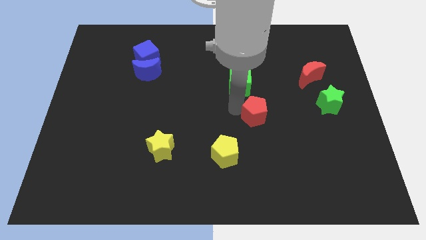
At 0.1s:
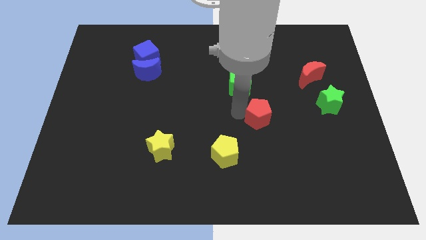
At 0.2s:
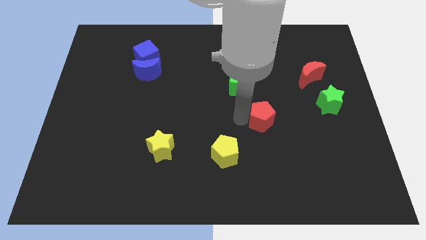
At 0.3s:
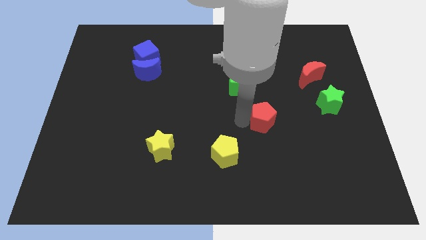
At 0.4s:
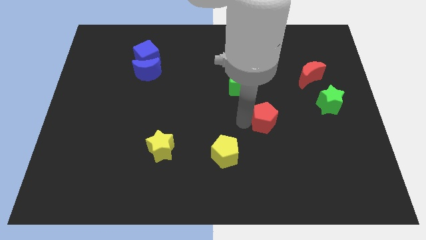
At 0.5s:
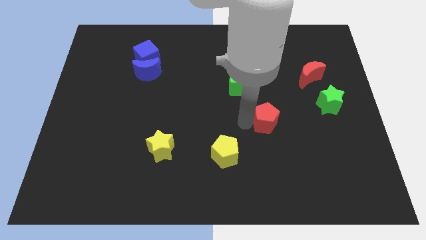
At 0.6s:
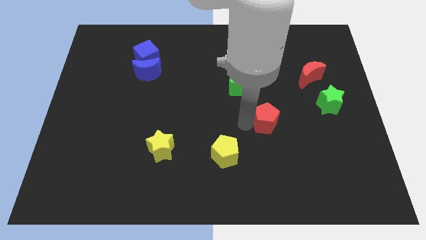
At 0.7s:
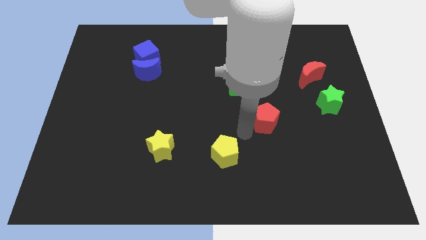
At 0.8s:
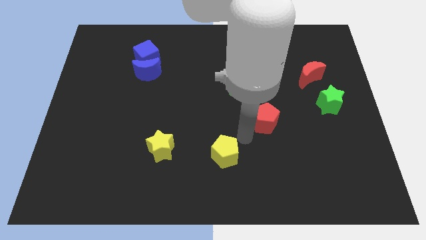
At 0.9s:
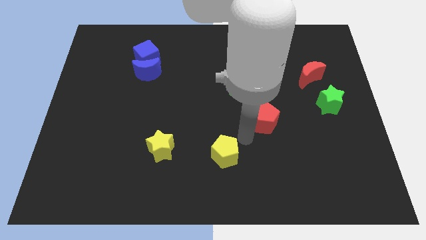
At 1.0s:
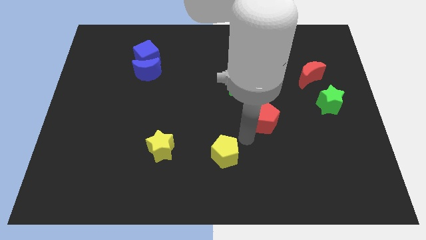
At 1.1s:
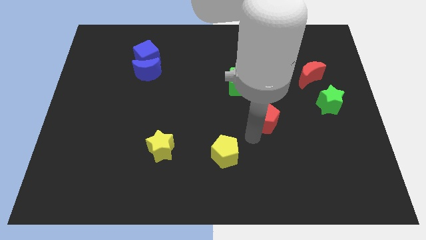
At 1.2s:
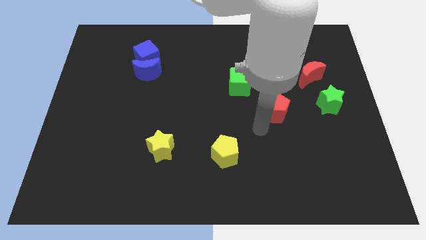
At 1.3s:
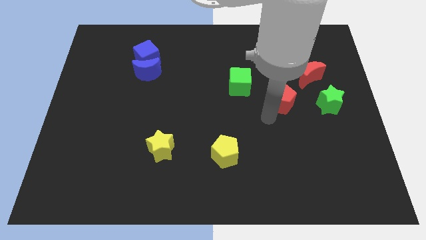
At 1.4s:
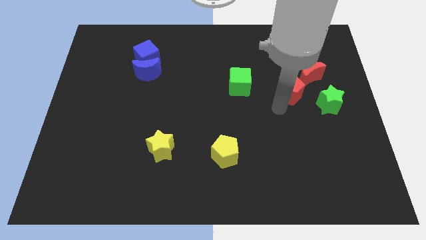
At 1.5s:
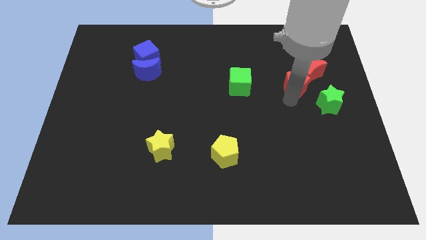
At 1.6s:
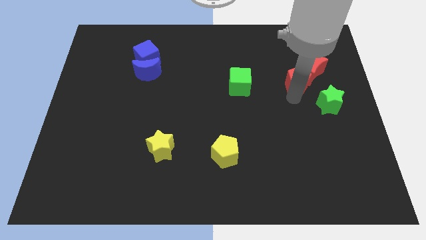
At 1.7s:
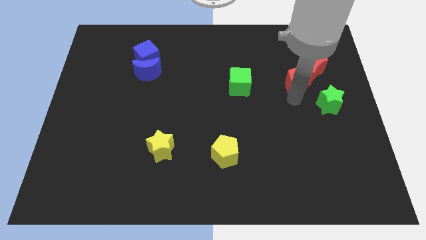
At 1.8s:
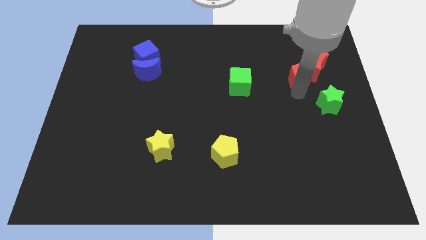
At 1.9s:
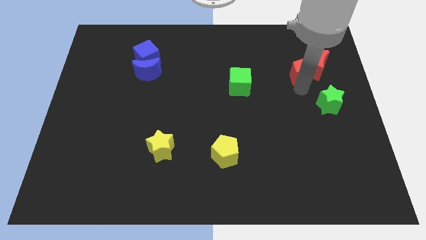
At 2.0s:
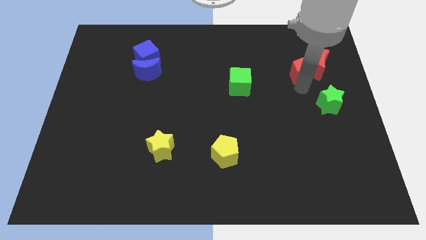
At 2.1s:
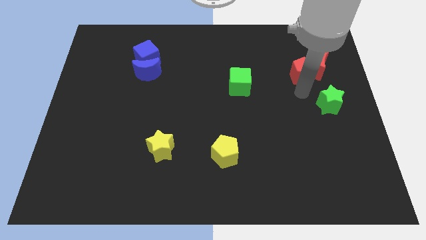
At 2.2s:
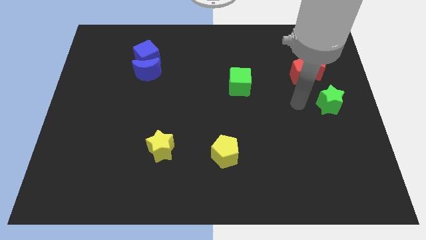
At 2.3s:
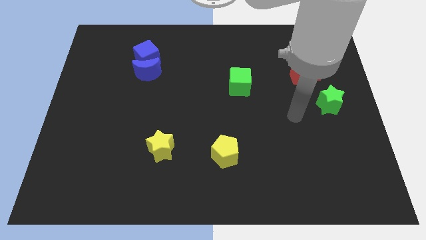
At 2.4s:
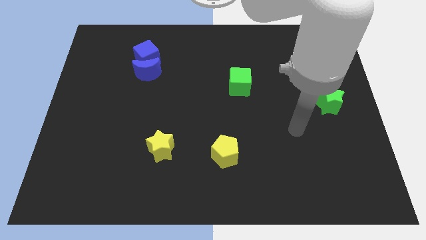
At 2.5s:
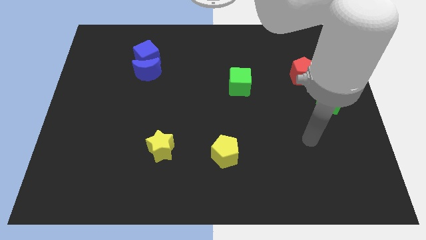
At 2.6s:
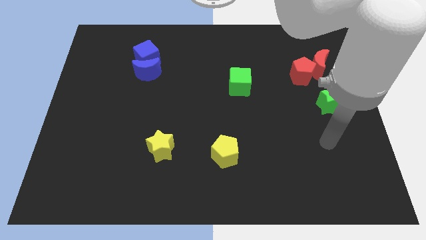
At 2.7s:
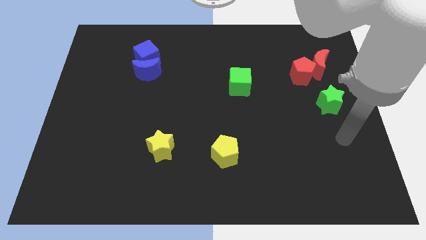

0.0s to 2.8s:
push the red pentagon into the red moon

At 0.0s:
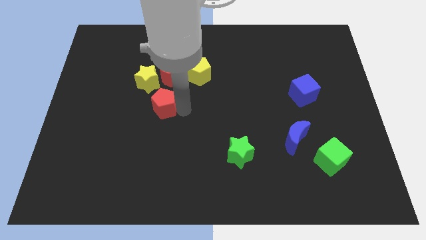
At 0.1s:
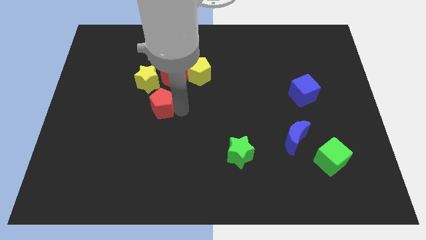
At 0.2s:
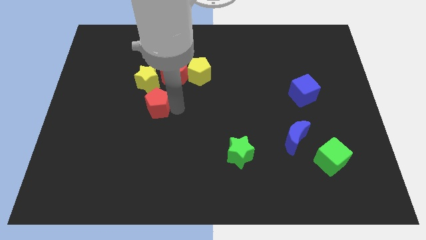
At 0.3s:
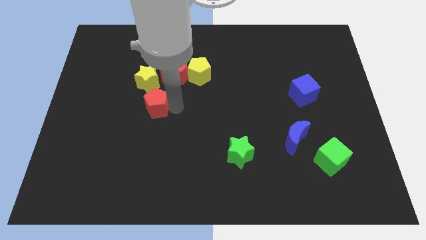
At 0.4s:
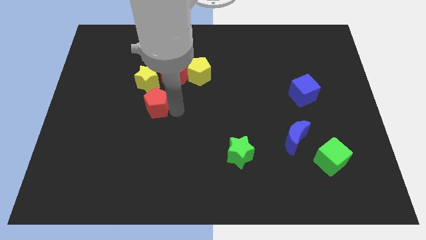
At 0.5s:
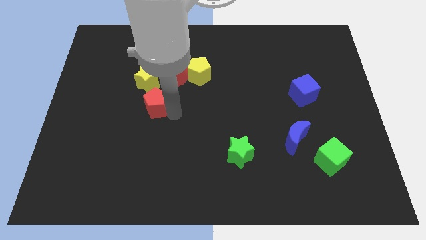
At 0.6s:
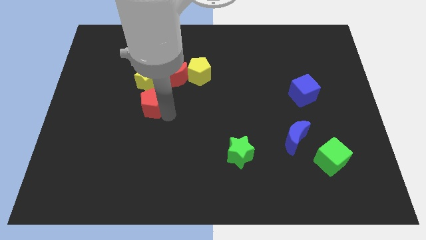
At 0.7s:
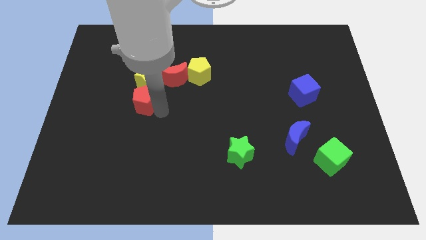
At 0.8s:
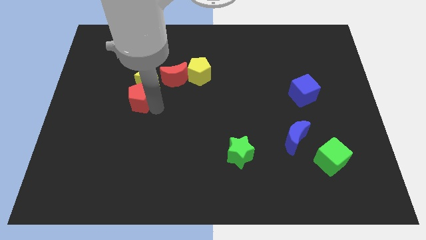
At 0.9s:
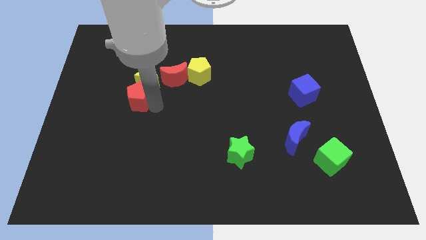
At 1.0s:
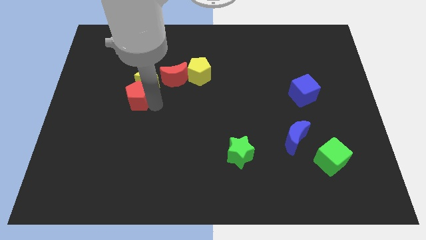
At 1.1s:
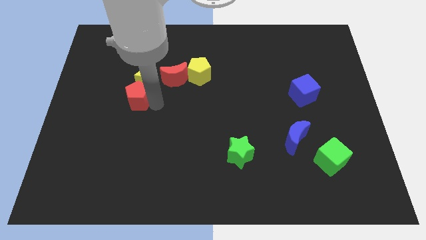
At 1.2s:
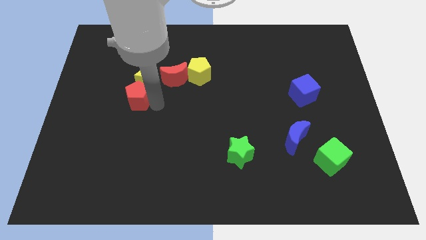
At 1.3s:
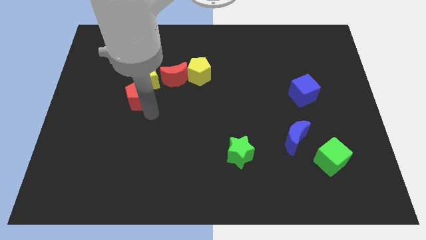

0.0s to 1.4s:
place the red pentagon under the yellow star

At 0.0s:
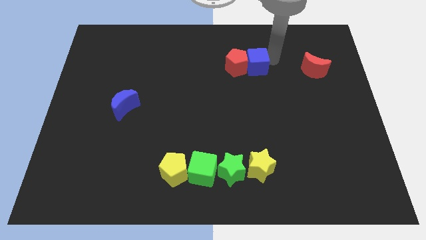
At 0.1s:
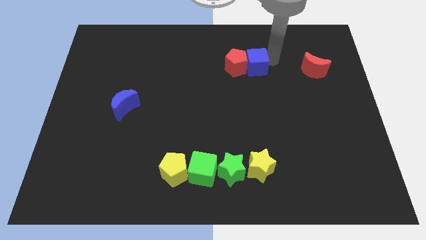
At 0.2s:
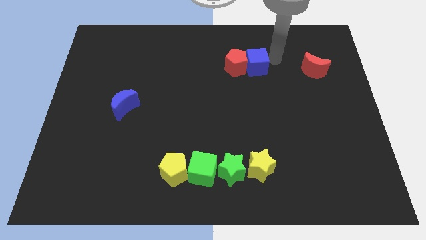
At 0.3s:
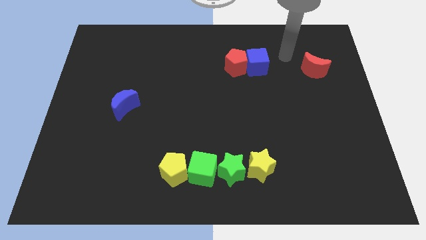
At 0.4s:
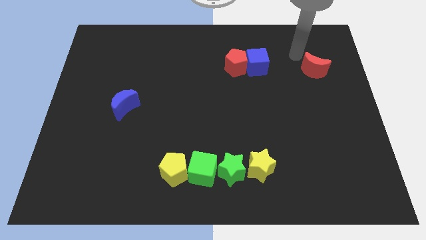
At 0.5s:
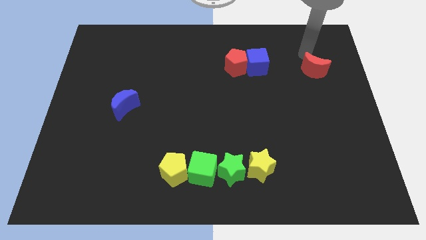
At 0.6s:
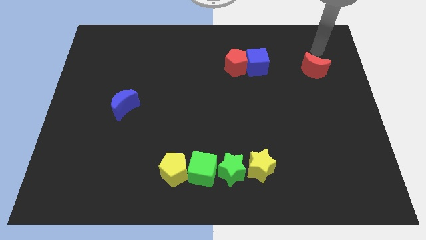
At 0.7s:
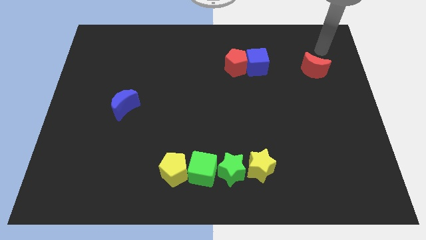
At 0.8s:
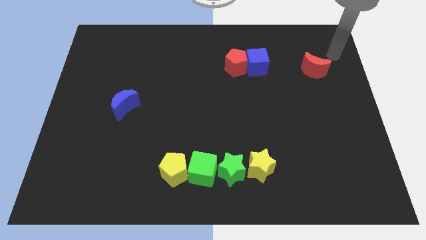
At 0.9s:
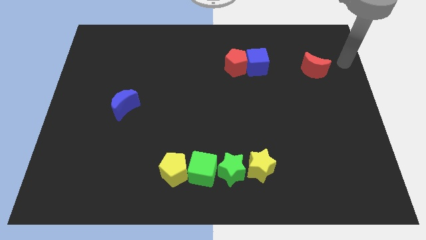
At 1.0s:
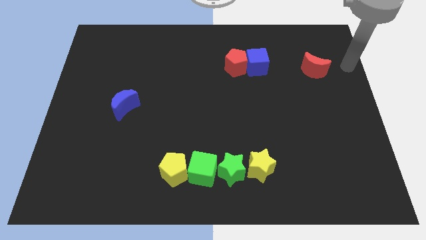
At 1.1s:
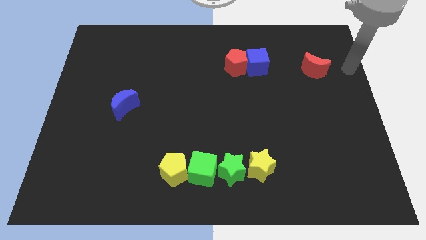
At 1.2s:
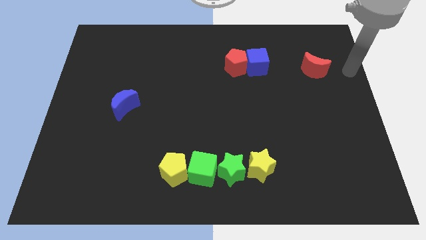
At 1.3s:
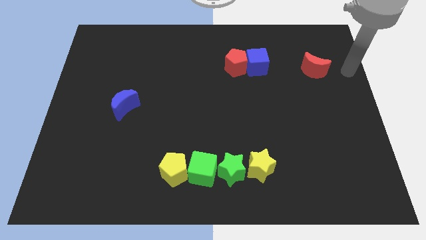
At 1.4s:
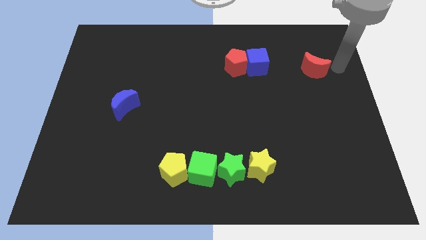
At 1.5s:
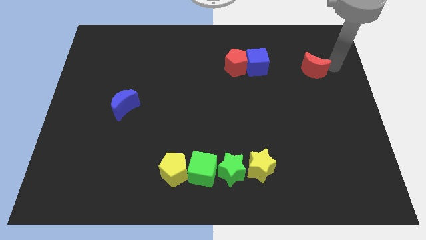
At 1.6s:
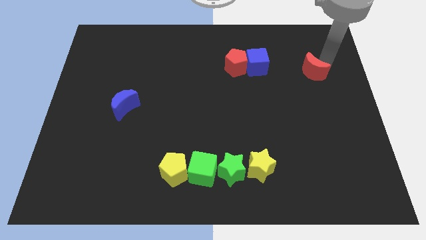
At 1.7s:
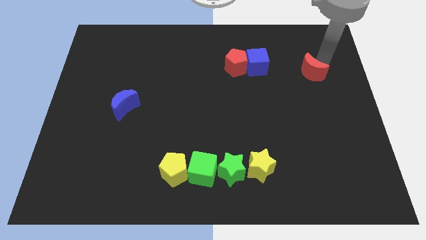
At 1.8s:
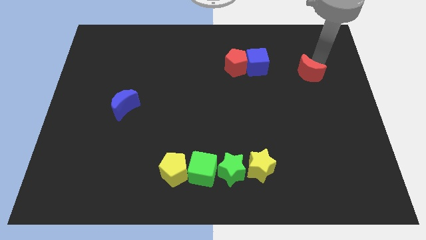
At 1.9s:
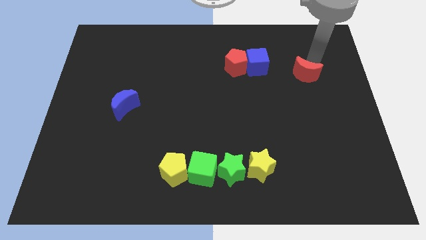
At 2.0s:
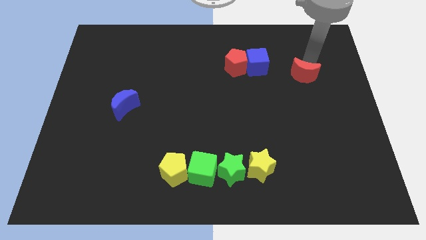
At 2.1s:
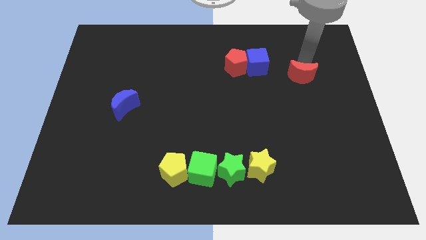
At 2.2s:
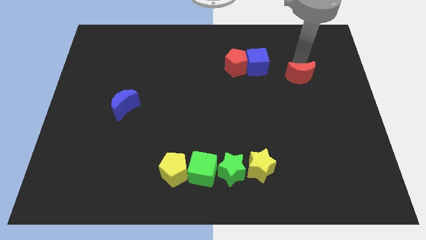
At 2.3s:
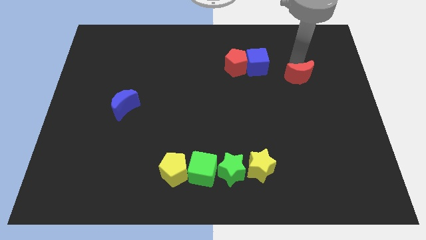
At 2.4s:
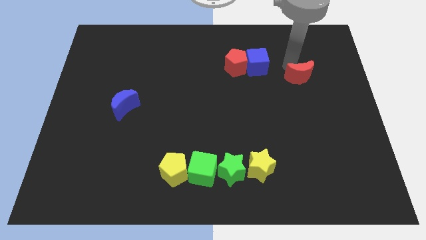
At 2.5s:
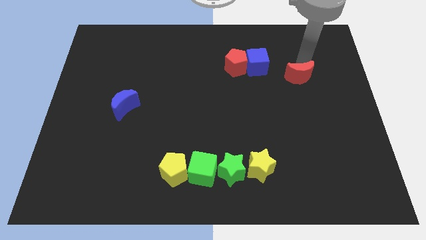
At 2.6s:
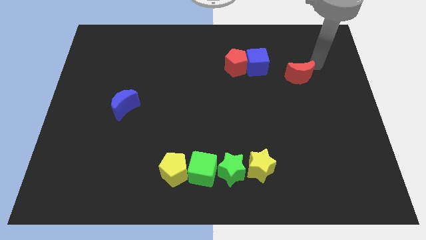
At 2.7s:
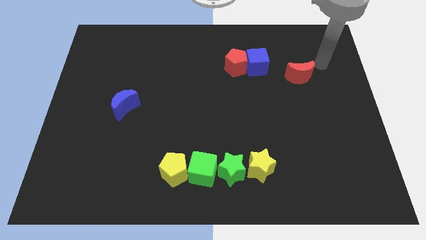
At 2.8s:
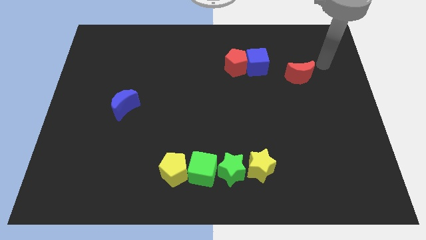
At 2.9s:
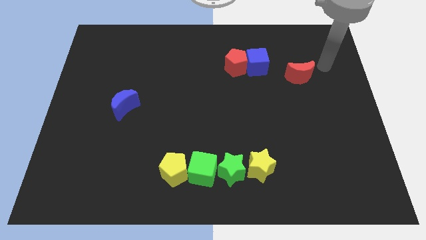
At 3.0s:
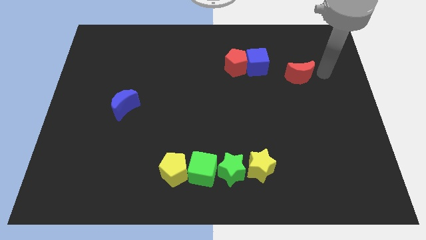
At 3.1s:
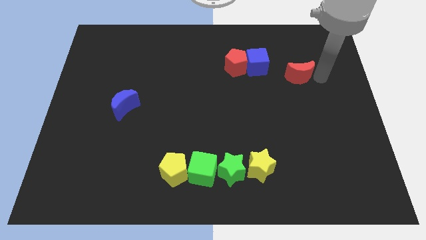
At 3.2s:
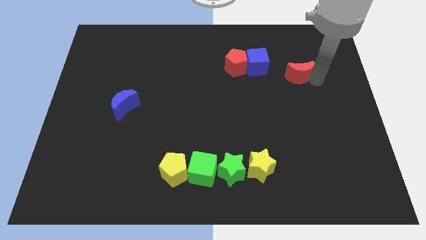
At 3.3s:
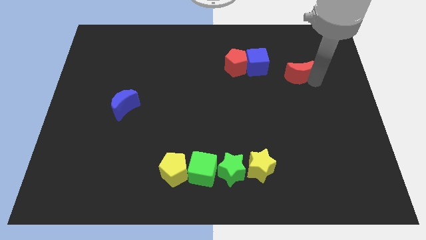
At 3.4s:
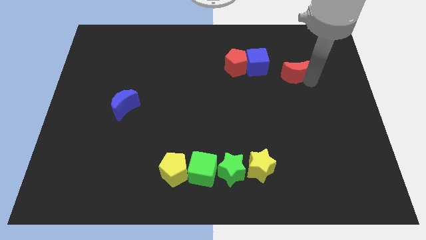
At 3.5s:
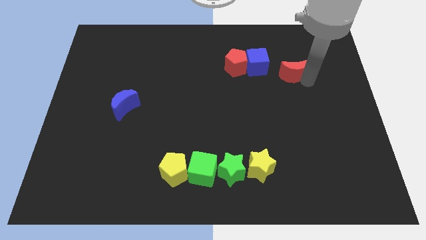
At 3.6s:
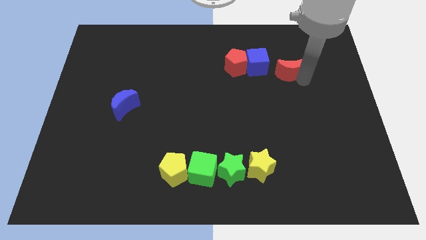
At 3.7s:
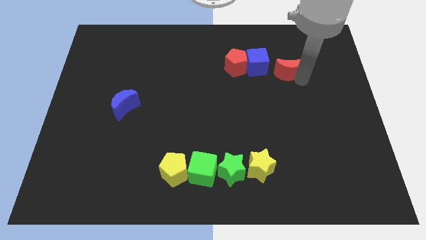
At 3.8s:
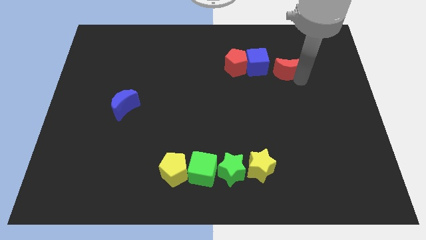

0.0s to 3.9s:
push the red moon closer to the blue cube

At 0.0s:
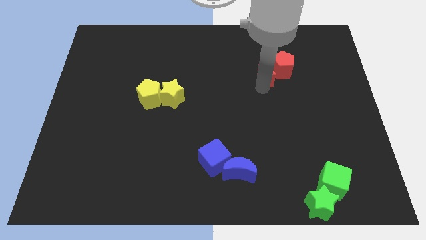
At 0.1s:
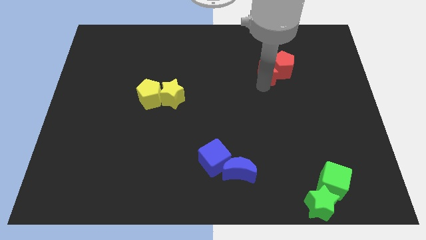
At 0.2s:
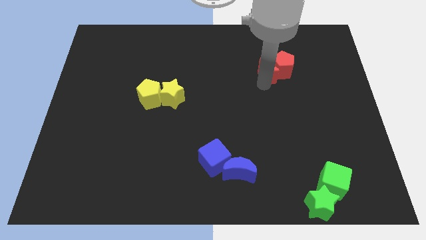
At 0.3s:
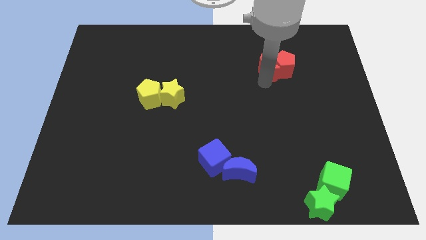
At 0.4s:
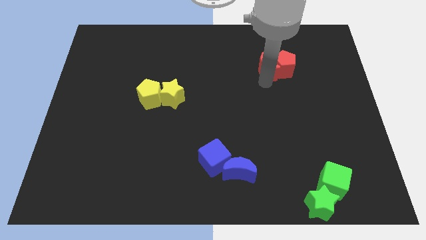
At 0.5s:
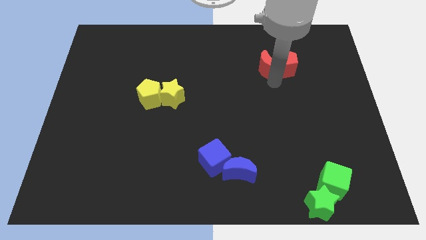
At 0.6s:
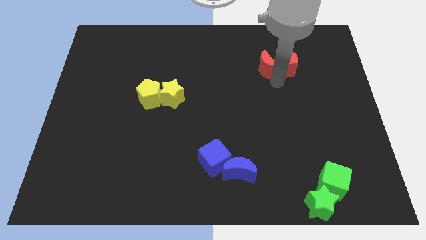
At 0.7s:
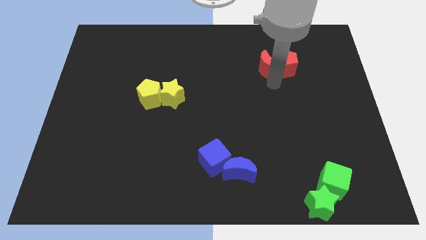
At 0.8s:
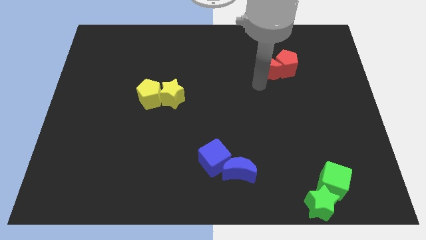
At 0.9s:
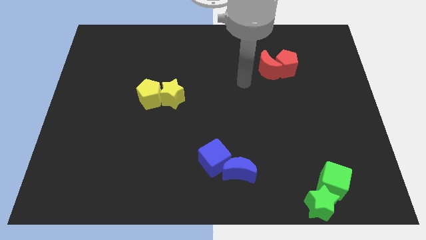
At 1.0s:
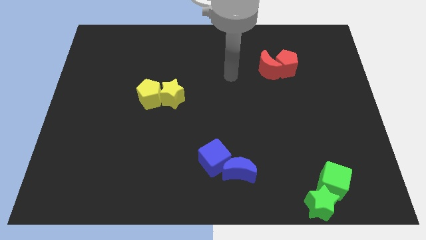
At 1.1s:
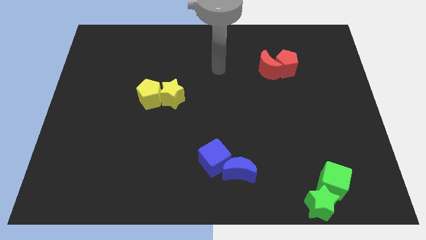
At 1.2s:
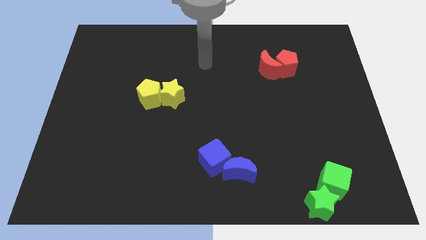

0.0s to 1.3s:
move your arm away from the red crescent
